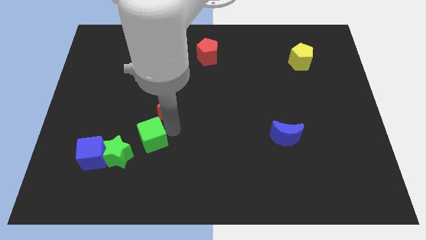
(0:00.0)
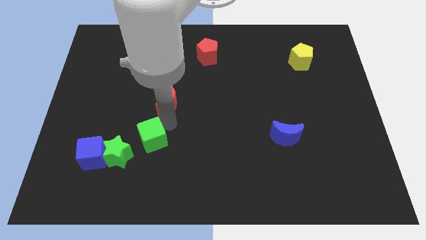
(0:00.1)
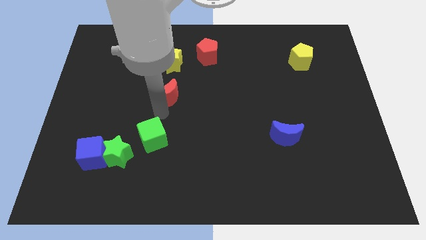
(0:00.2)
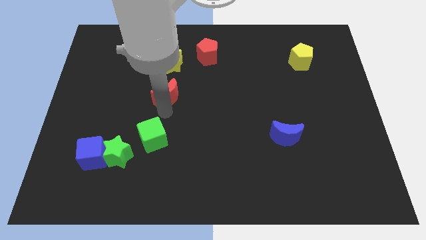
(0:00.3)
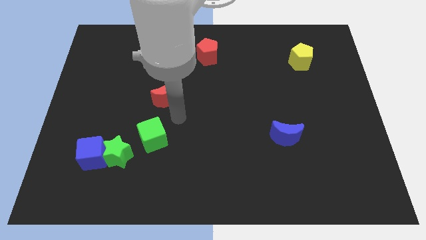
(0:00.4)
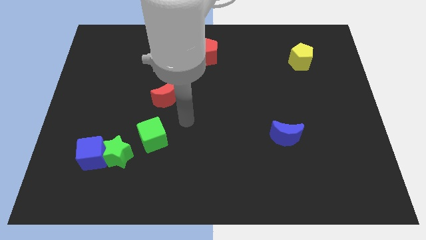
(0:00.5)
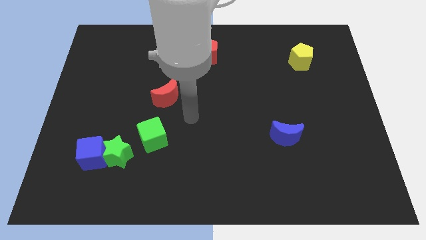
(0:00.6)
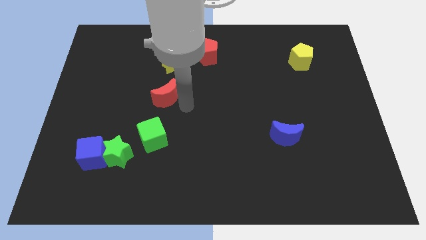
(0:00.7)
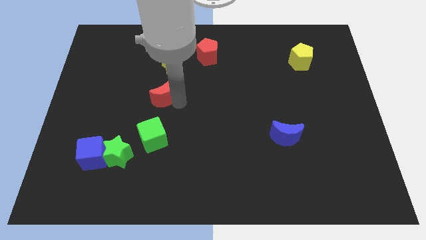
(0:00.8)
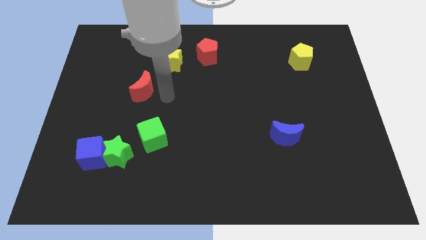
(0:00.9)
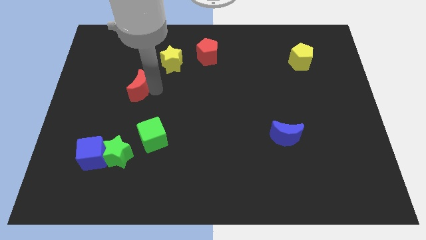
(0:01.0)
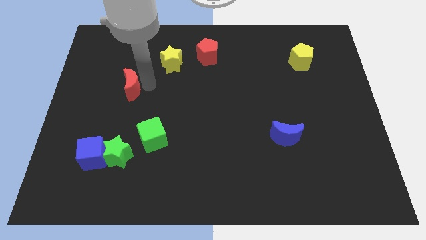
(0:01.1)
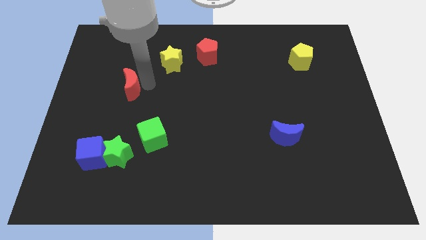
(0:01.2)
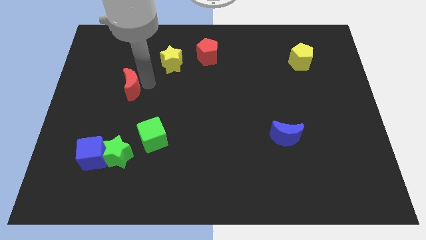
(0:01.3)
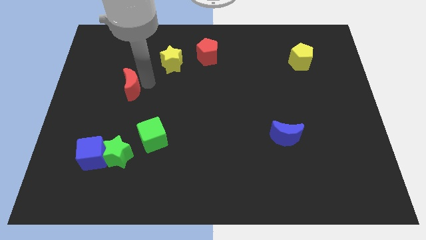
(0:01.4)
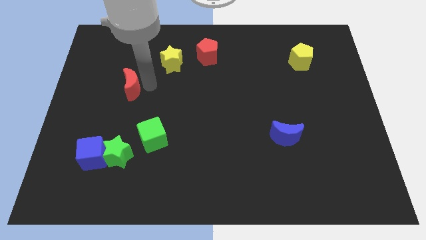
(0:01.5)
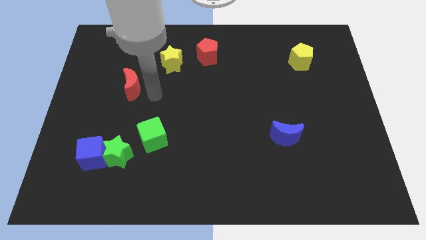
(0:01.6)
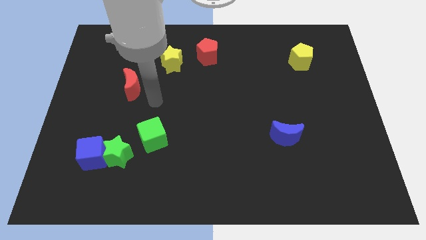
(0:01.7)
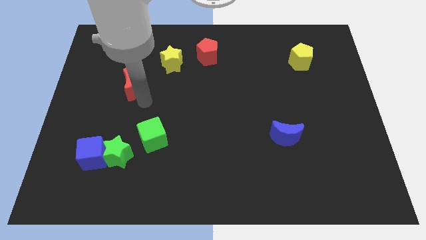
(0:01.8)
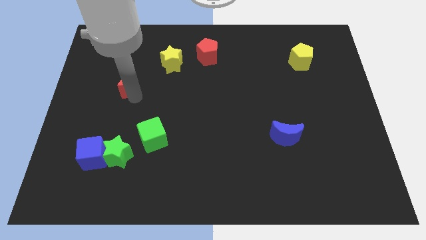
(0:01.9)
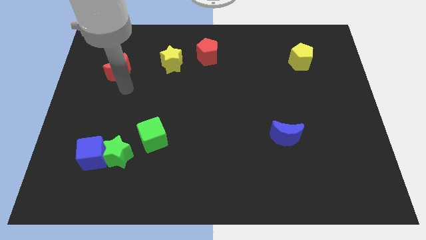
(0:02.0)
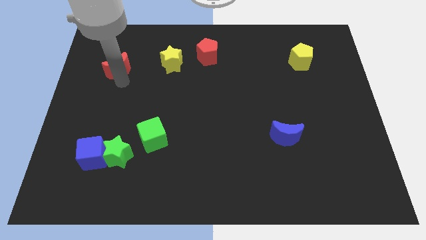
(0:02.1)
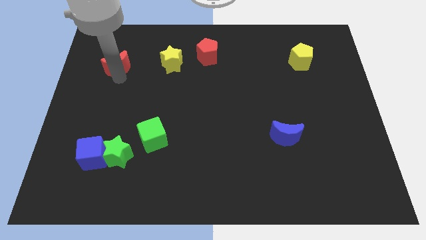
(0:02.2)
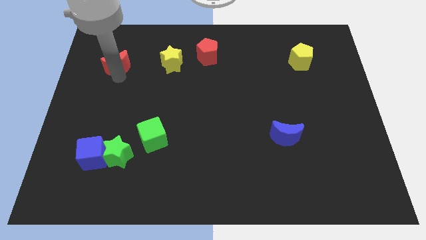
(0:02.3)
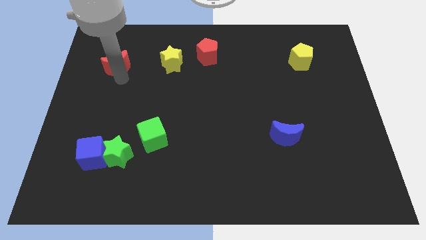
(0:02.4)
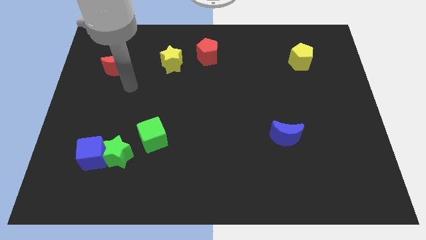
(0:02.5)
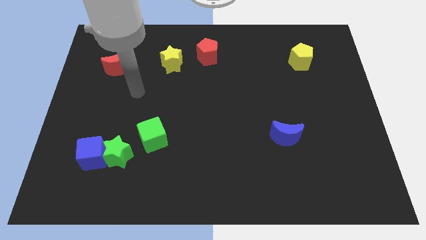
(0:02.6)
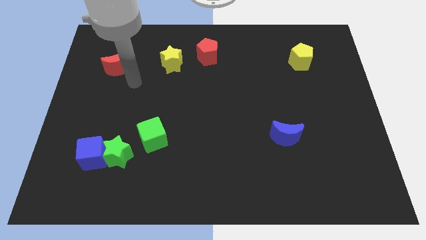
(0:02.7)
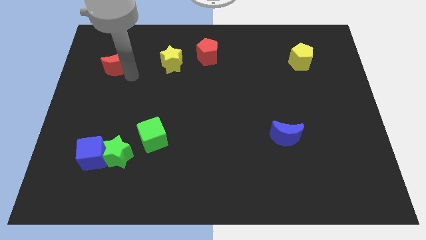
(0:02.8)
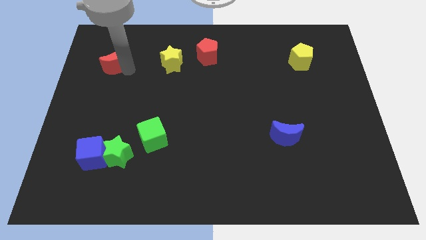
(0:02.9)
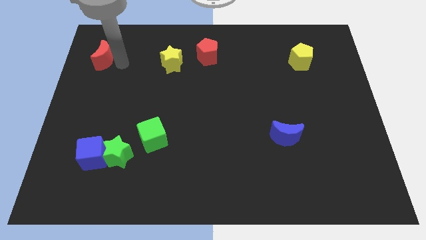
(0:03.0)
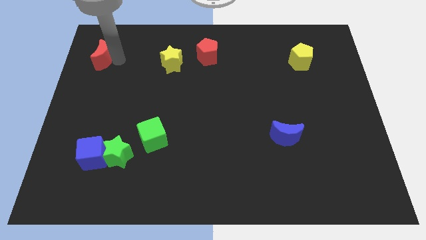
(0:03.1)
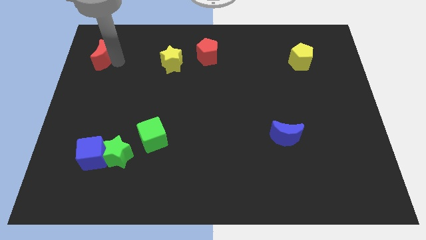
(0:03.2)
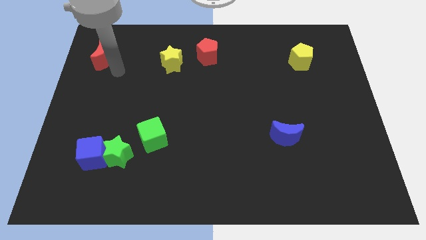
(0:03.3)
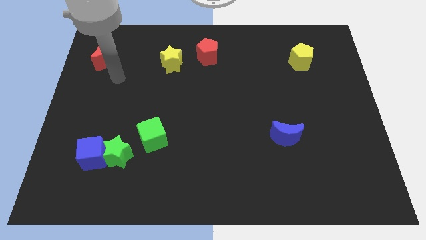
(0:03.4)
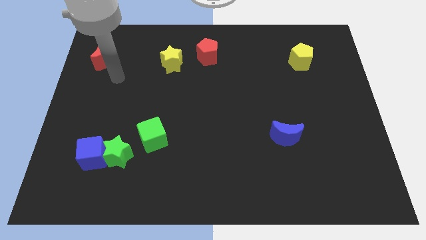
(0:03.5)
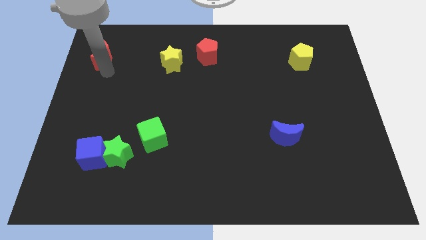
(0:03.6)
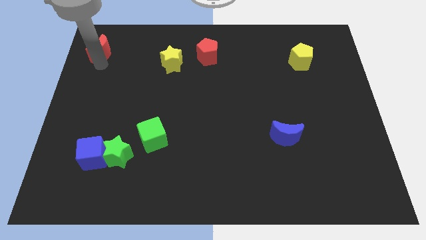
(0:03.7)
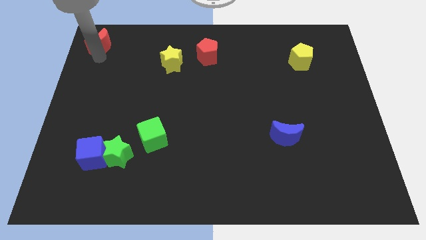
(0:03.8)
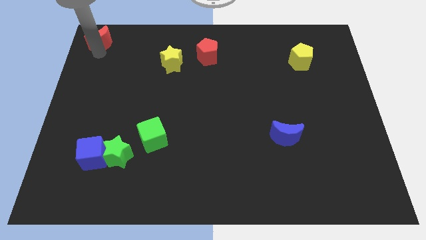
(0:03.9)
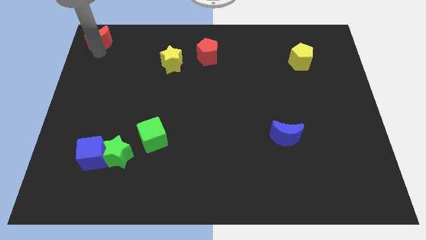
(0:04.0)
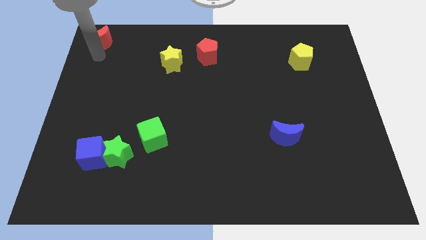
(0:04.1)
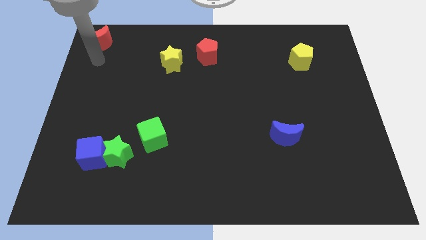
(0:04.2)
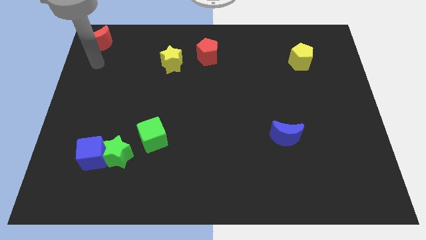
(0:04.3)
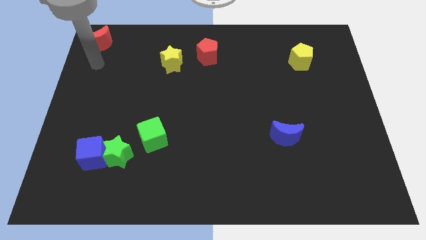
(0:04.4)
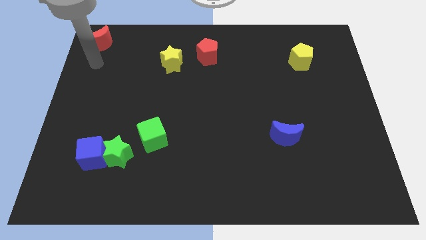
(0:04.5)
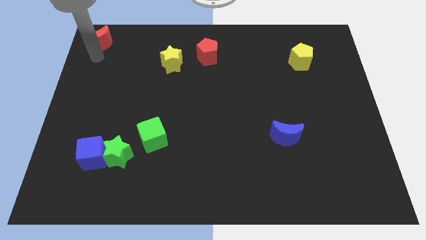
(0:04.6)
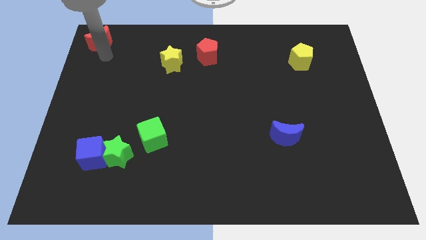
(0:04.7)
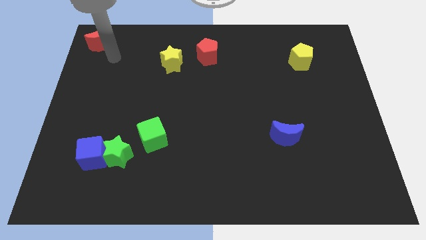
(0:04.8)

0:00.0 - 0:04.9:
push the red crescent to the top left corner of the board

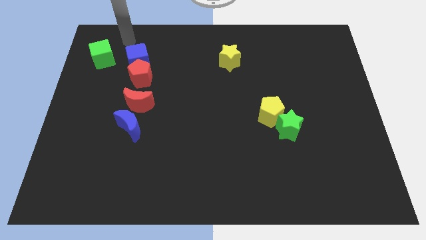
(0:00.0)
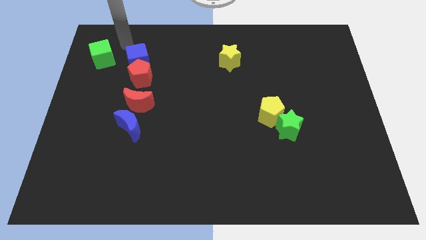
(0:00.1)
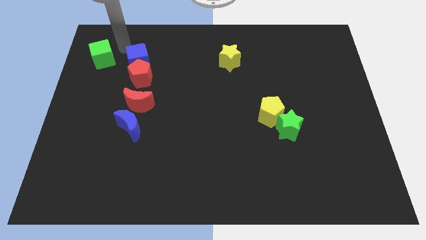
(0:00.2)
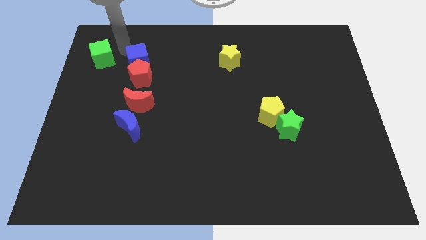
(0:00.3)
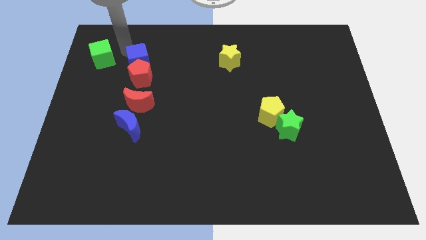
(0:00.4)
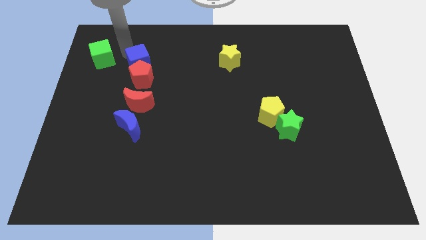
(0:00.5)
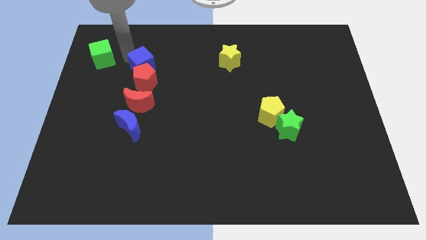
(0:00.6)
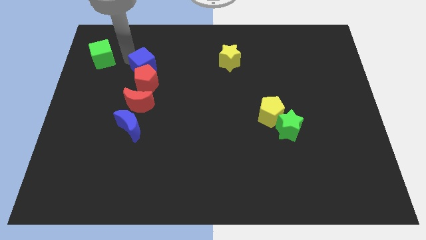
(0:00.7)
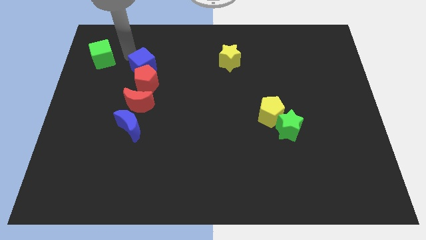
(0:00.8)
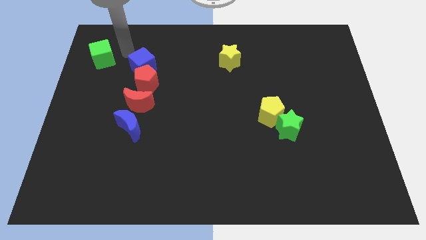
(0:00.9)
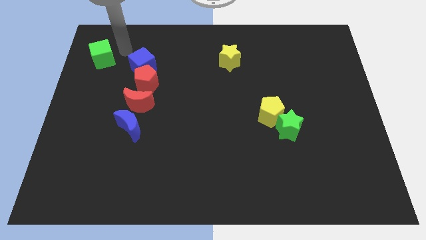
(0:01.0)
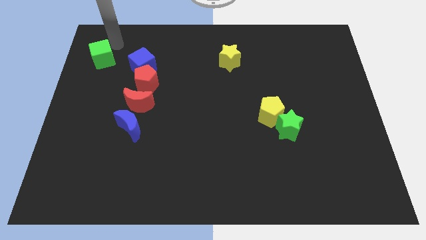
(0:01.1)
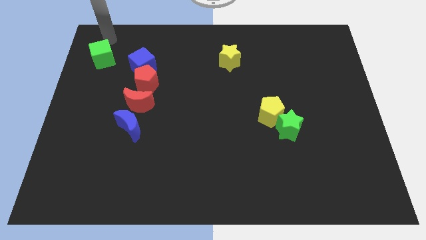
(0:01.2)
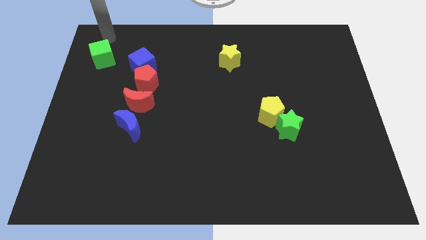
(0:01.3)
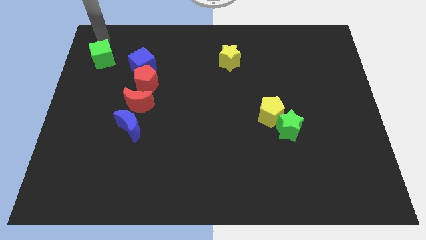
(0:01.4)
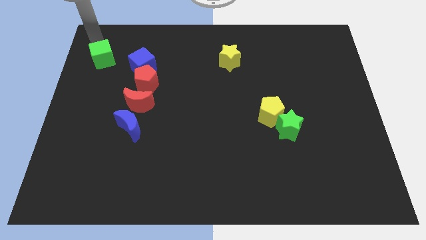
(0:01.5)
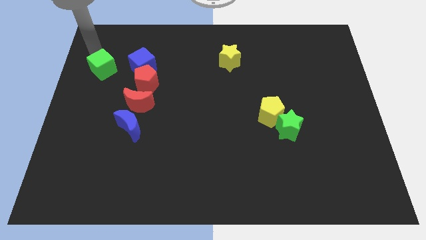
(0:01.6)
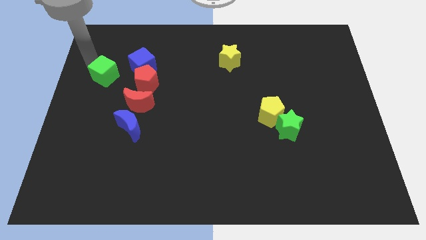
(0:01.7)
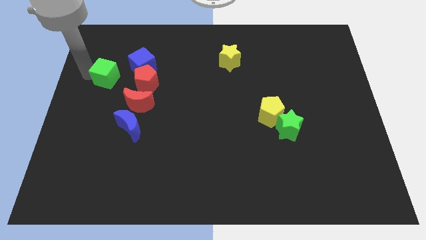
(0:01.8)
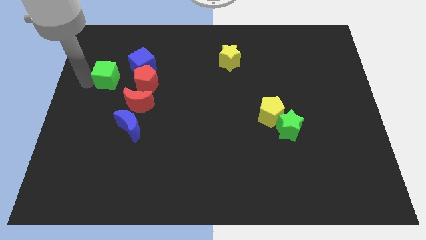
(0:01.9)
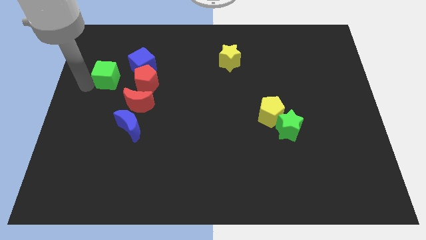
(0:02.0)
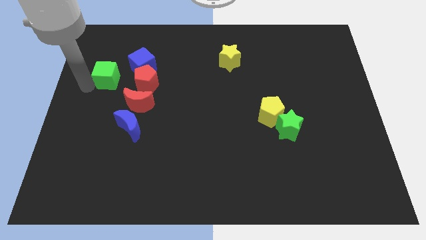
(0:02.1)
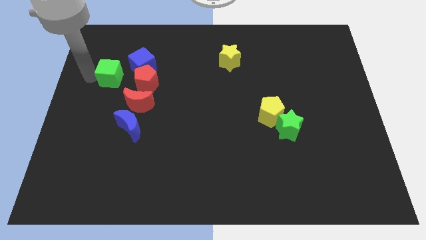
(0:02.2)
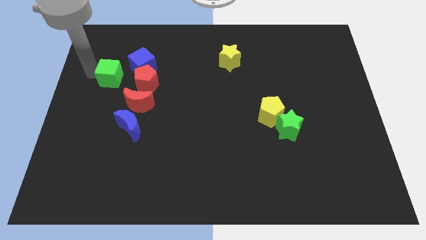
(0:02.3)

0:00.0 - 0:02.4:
move the green cube left to the red pentagon

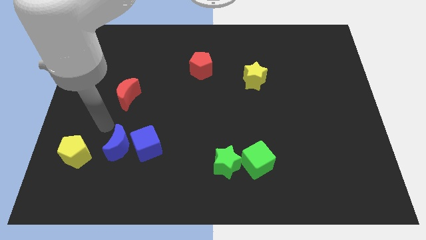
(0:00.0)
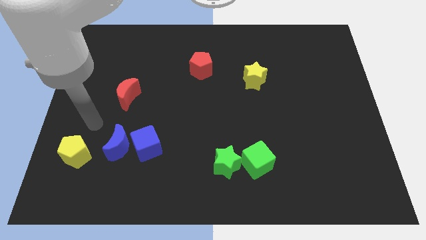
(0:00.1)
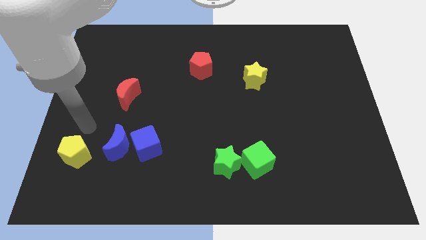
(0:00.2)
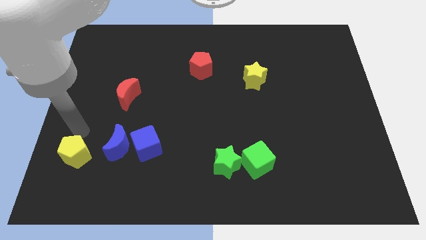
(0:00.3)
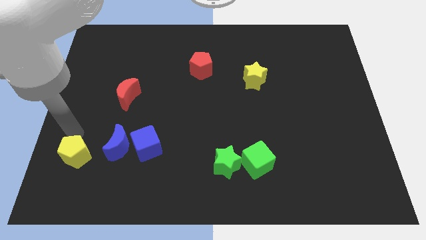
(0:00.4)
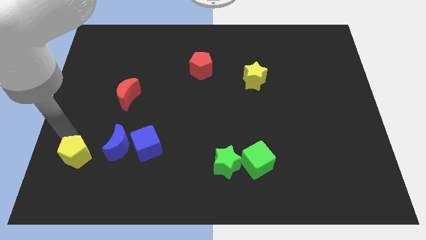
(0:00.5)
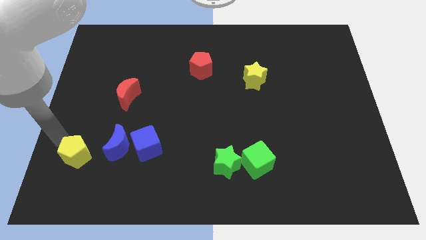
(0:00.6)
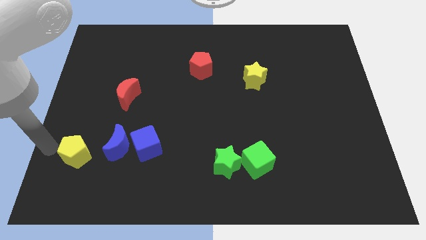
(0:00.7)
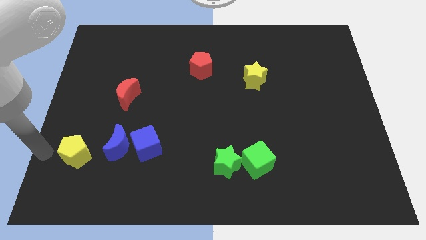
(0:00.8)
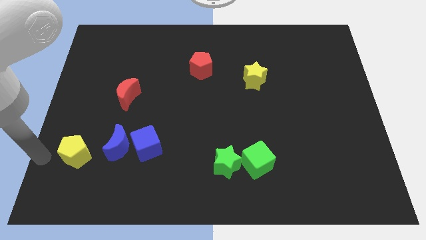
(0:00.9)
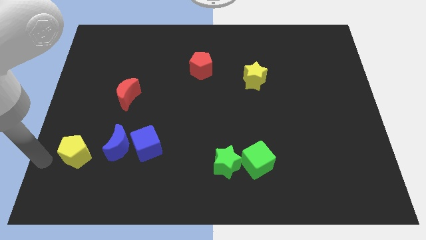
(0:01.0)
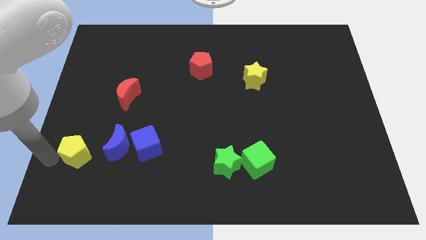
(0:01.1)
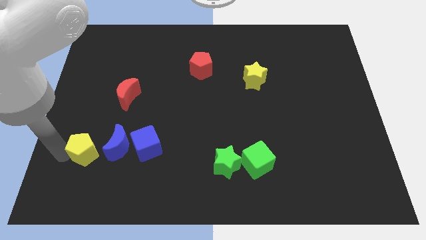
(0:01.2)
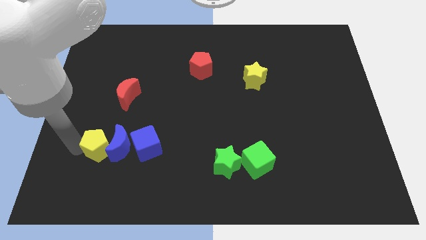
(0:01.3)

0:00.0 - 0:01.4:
move the yellow pentagon into the blue crescent

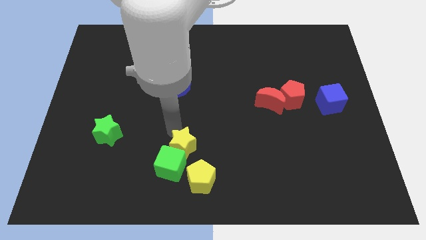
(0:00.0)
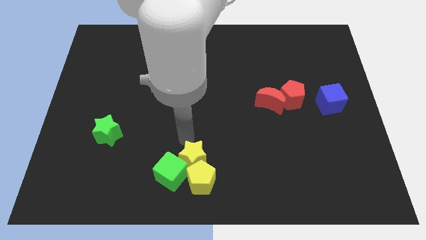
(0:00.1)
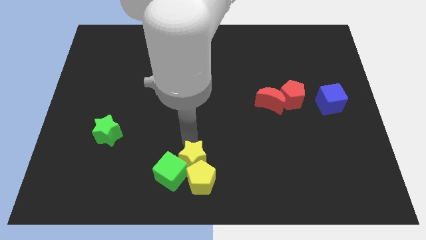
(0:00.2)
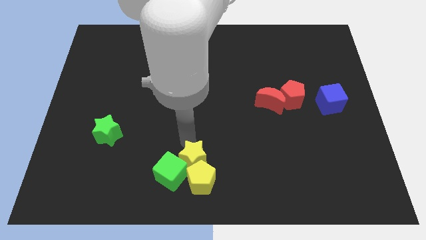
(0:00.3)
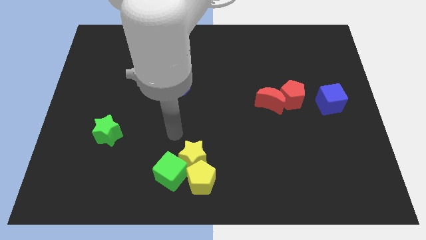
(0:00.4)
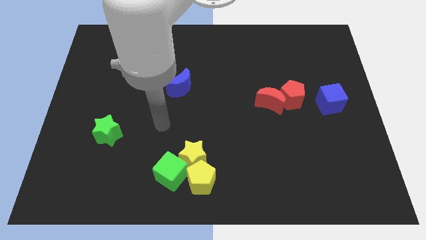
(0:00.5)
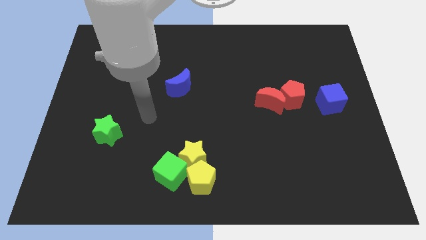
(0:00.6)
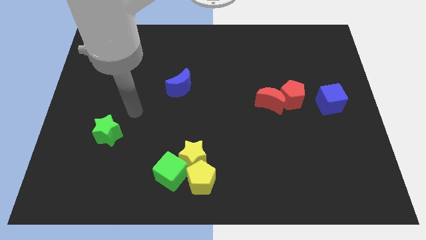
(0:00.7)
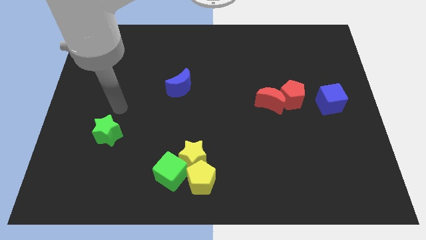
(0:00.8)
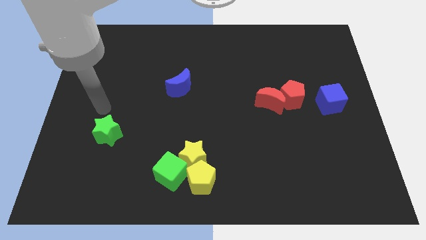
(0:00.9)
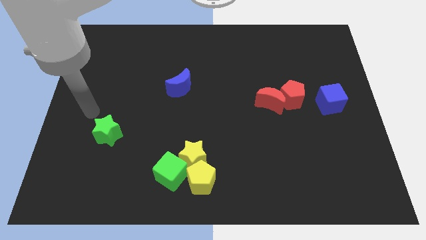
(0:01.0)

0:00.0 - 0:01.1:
place the yellow star above the green cube and the yellow pentagon
